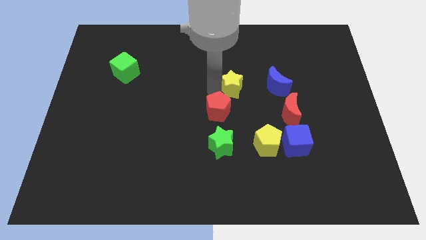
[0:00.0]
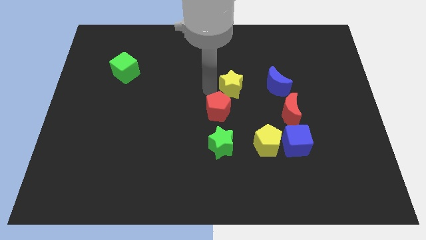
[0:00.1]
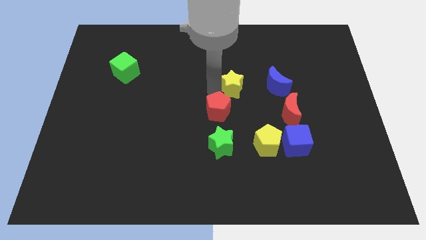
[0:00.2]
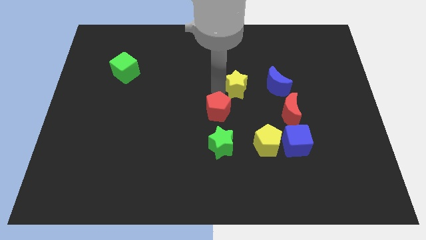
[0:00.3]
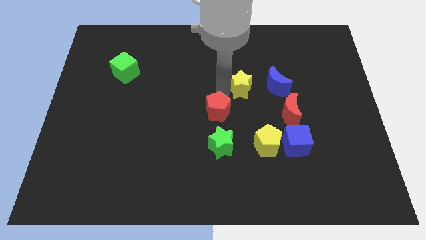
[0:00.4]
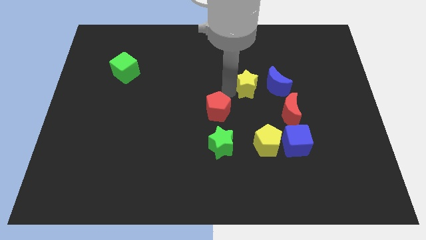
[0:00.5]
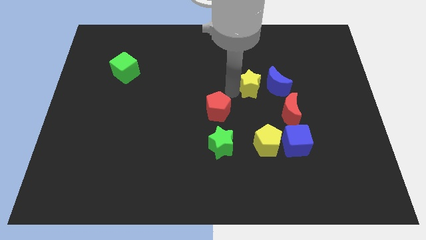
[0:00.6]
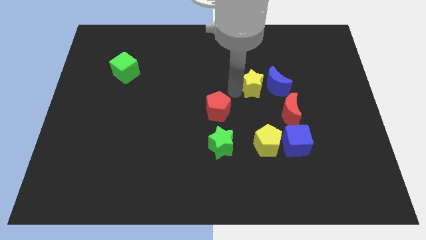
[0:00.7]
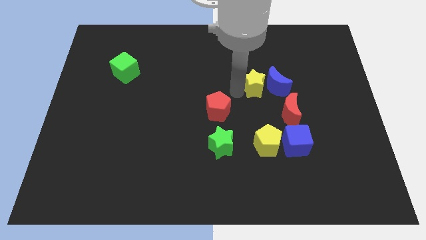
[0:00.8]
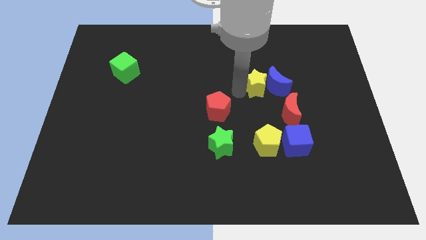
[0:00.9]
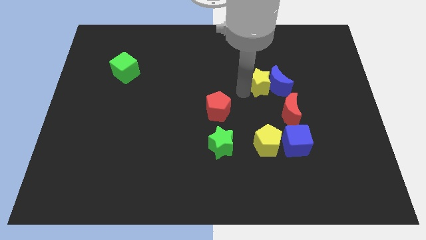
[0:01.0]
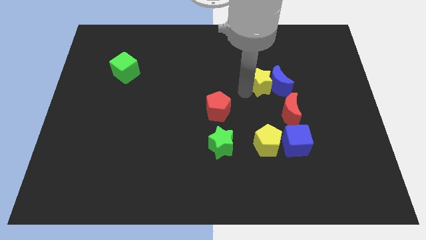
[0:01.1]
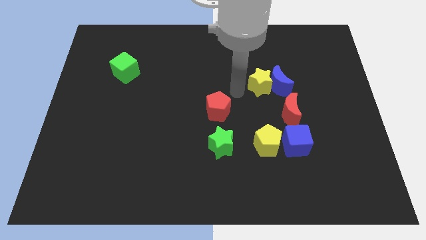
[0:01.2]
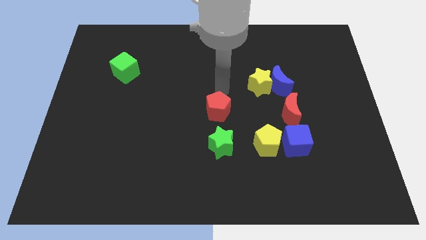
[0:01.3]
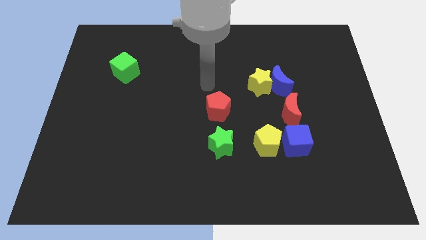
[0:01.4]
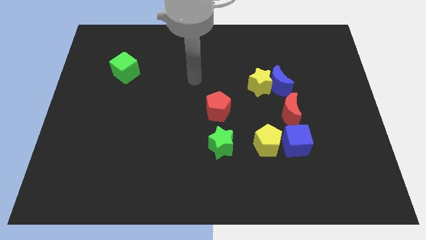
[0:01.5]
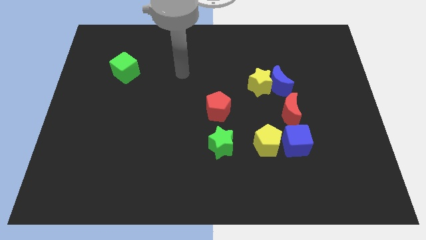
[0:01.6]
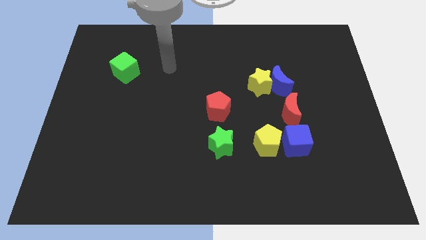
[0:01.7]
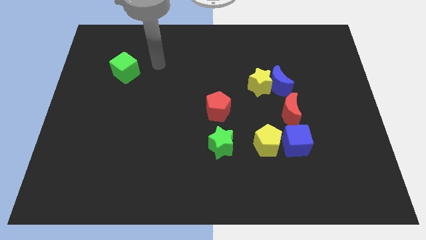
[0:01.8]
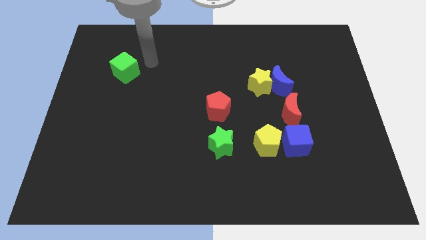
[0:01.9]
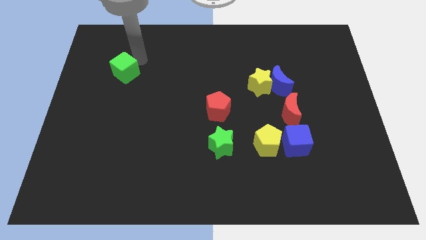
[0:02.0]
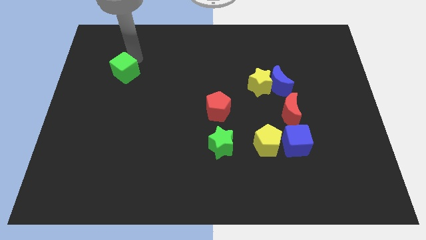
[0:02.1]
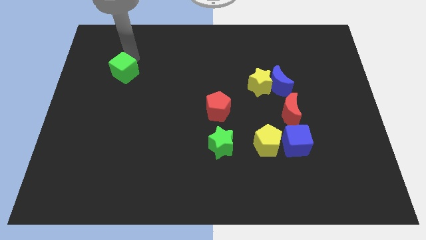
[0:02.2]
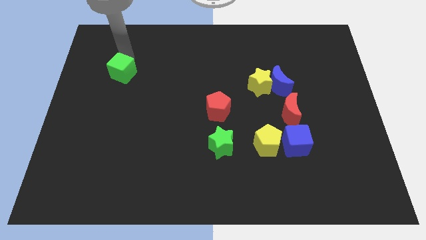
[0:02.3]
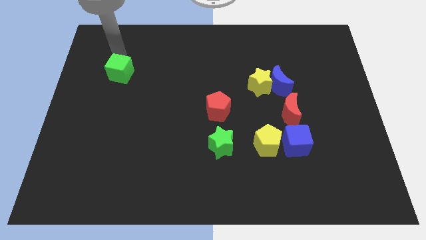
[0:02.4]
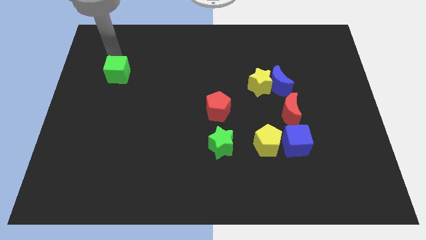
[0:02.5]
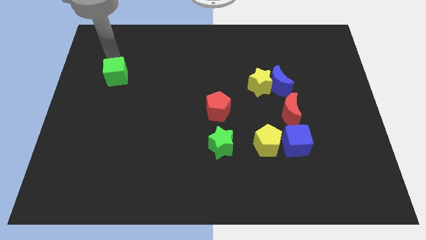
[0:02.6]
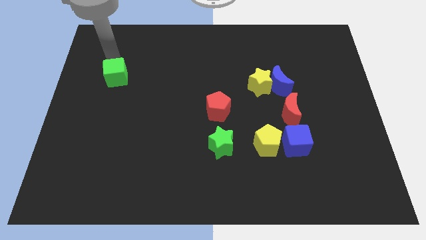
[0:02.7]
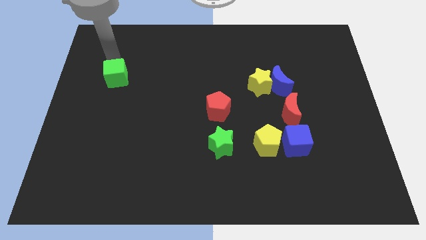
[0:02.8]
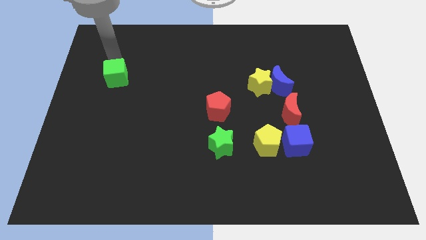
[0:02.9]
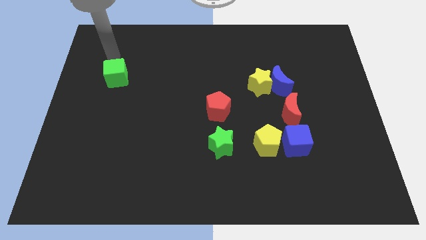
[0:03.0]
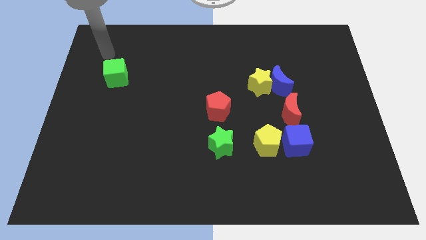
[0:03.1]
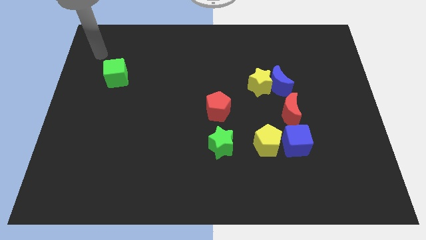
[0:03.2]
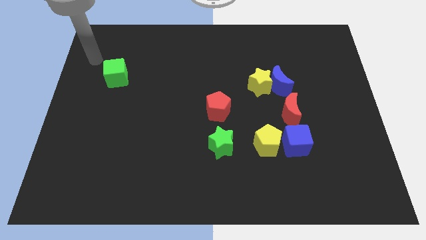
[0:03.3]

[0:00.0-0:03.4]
push the yellow star close to the blue moon

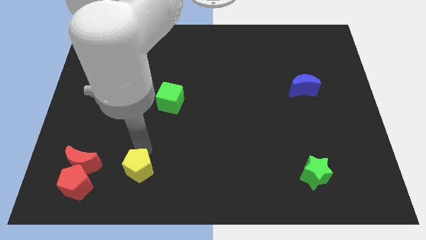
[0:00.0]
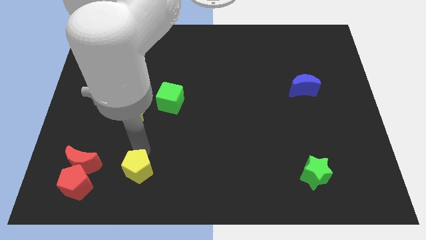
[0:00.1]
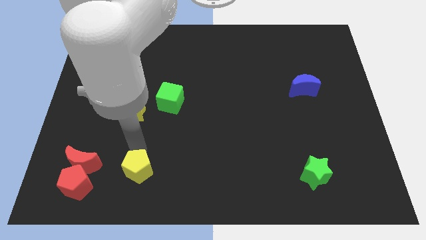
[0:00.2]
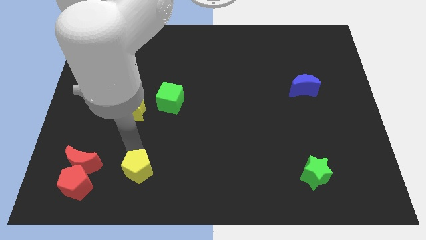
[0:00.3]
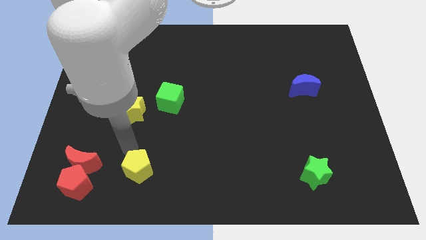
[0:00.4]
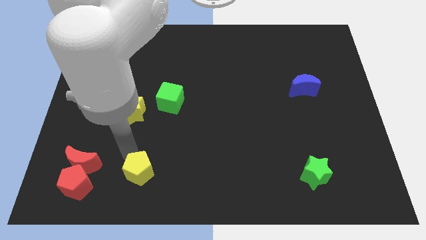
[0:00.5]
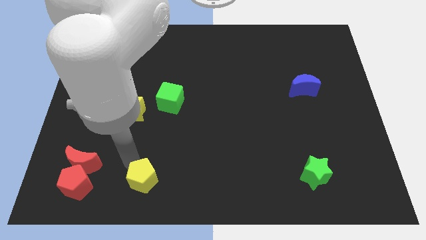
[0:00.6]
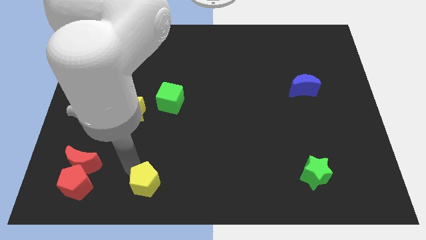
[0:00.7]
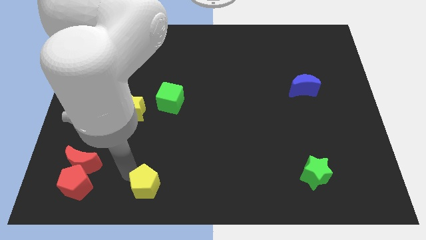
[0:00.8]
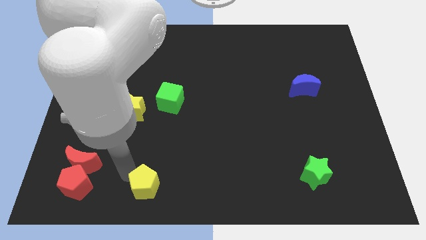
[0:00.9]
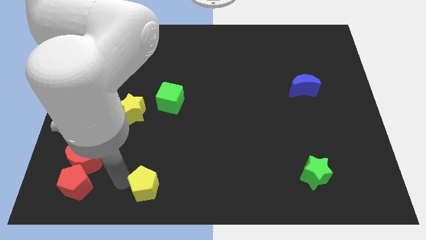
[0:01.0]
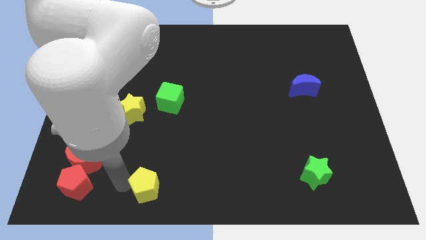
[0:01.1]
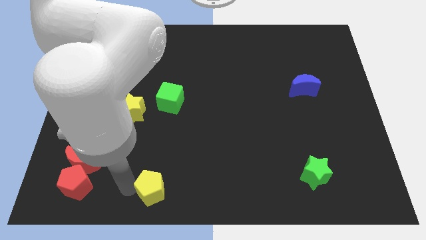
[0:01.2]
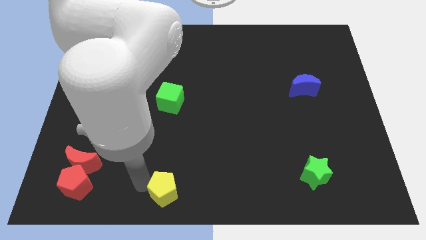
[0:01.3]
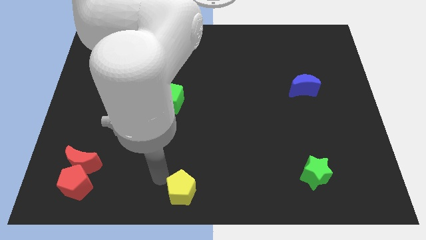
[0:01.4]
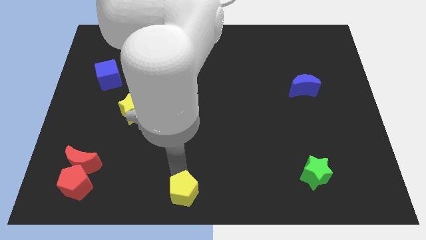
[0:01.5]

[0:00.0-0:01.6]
push the yellow pentagon towards the bottom center of the board

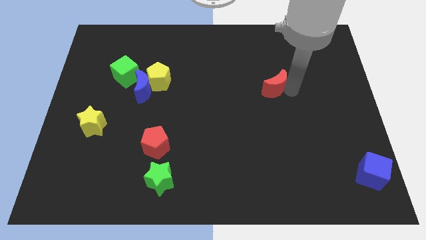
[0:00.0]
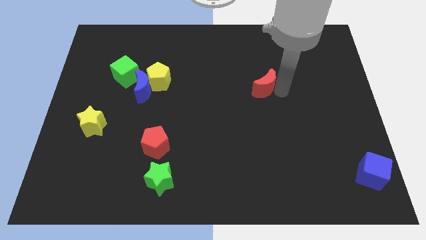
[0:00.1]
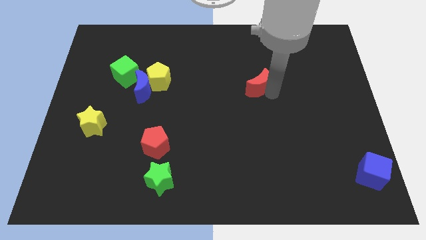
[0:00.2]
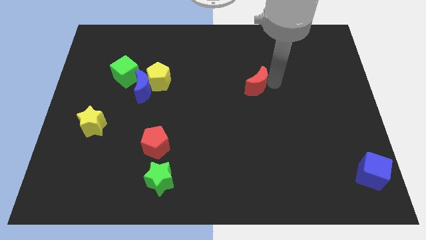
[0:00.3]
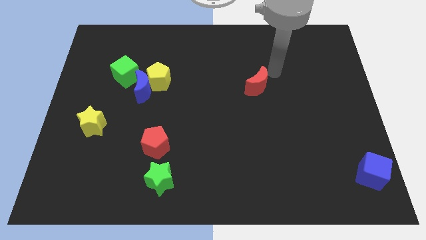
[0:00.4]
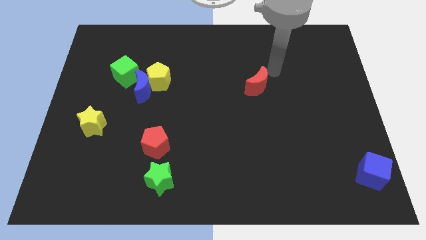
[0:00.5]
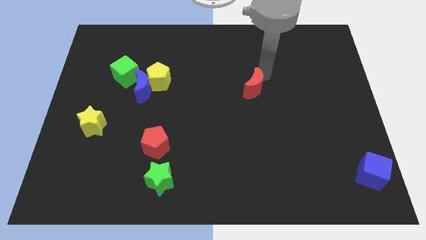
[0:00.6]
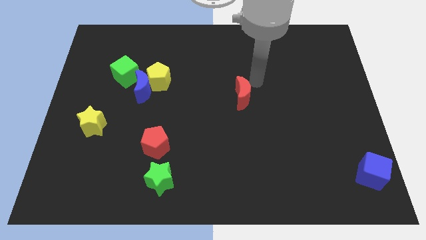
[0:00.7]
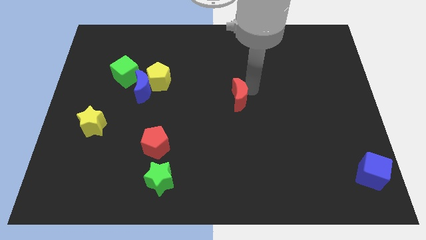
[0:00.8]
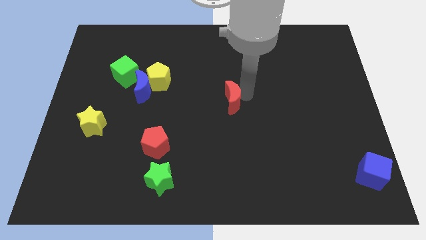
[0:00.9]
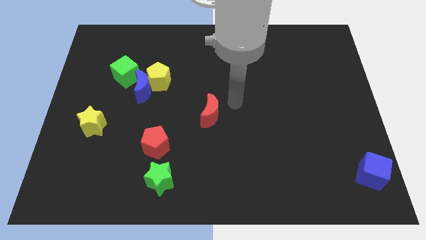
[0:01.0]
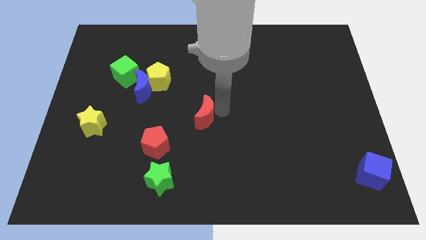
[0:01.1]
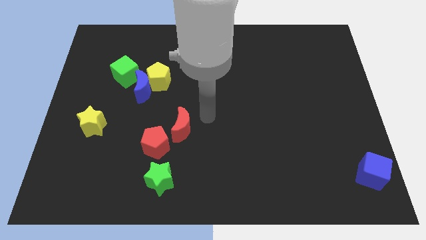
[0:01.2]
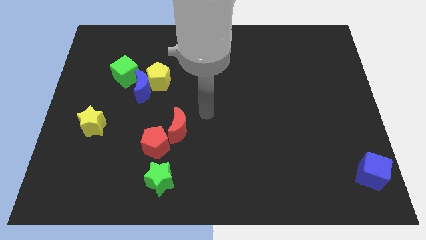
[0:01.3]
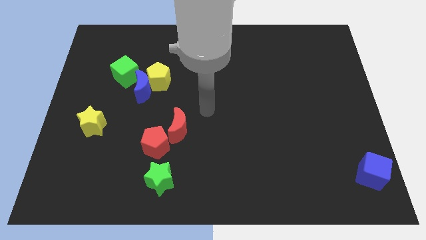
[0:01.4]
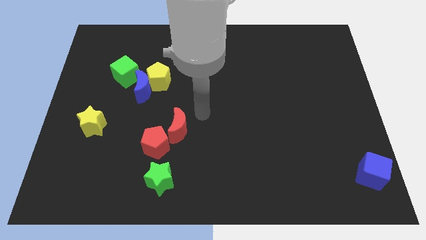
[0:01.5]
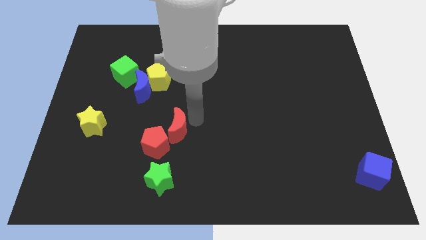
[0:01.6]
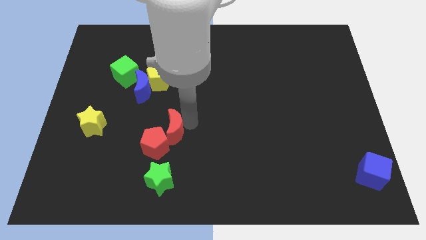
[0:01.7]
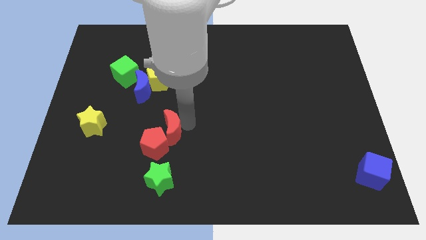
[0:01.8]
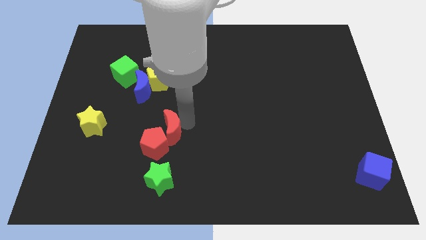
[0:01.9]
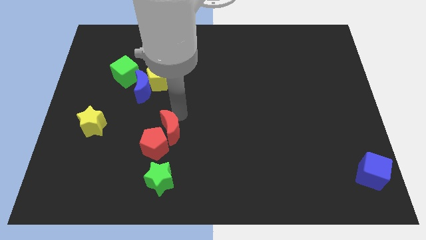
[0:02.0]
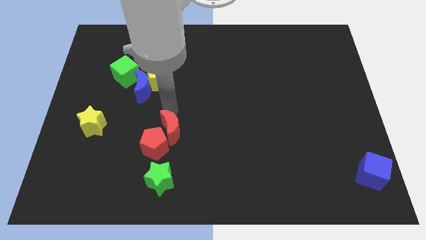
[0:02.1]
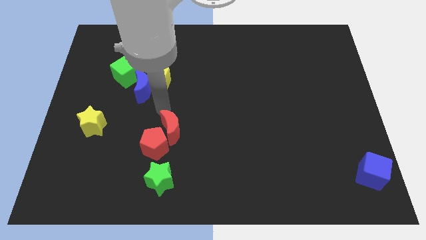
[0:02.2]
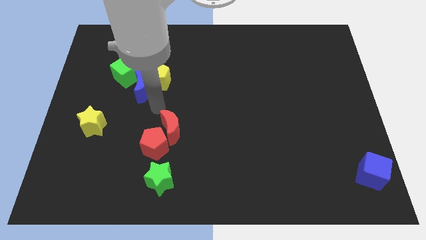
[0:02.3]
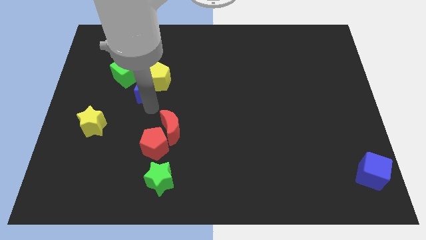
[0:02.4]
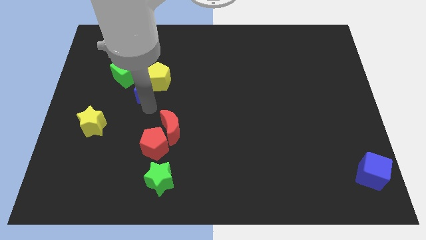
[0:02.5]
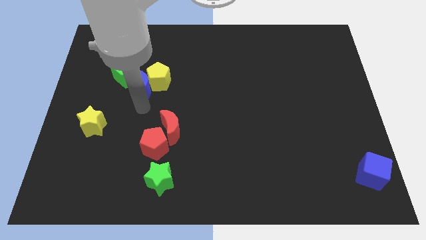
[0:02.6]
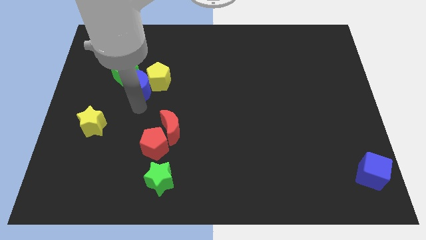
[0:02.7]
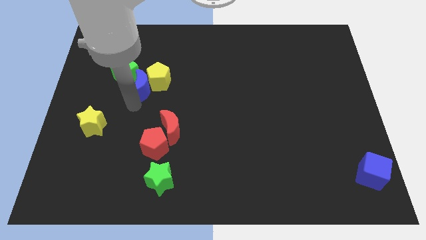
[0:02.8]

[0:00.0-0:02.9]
place the red moon beside red pentagon

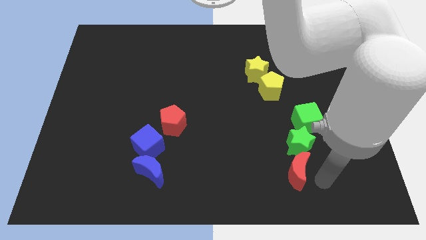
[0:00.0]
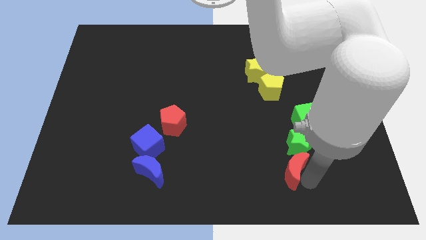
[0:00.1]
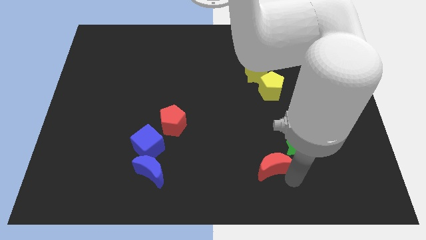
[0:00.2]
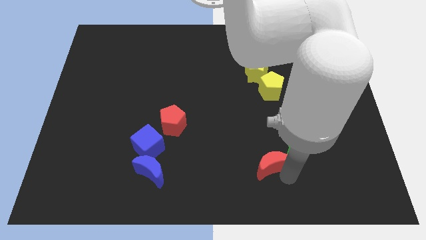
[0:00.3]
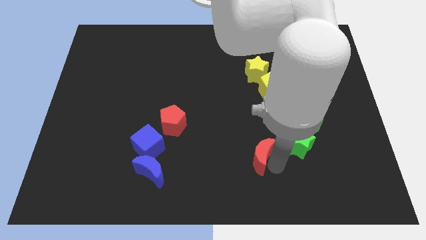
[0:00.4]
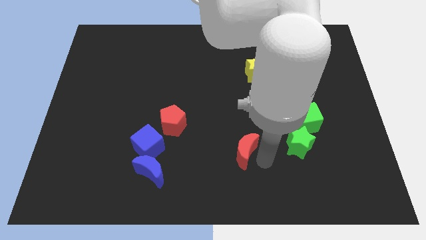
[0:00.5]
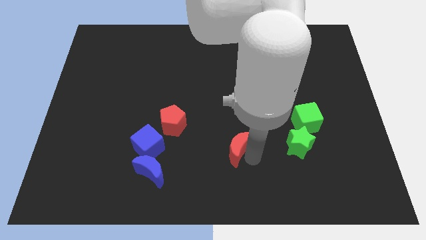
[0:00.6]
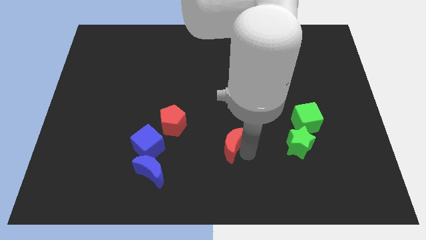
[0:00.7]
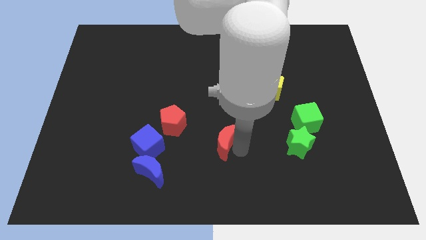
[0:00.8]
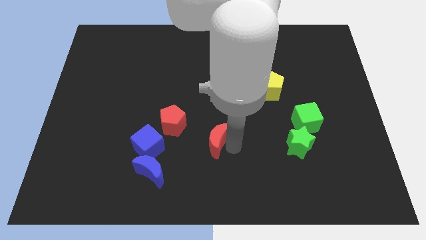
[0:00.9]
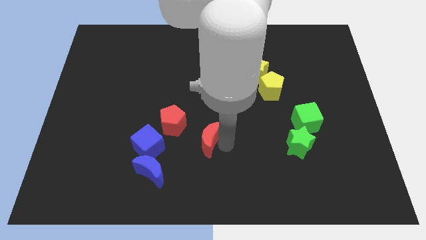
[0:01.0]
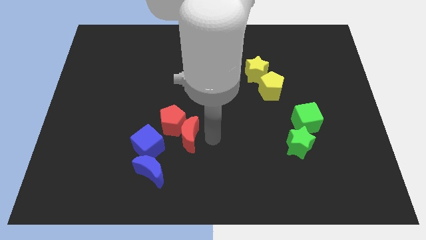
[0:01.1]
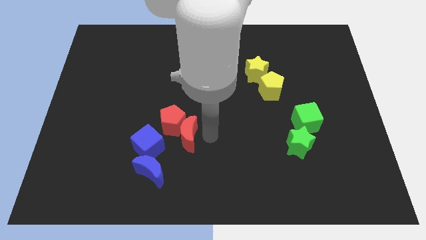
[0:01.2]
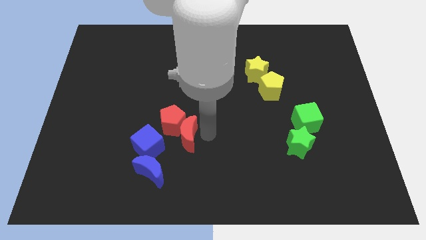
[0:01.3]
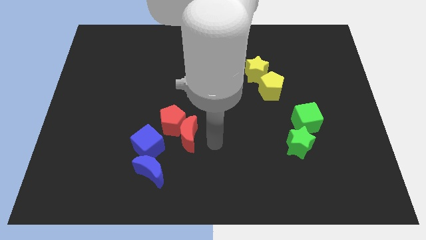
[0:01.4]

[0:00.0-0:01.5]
move the red crecent into red pentagon
